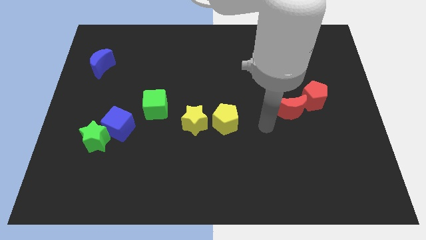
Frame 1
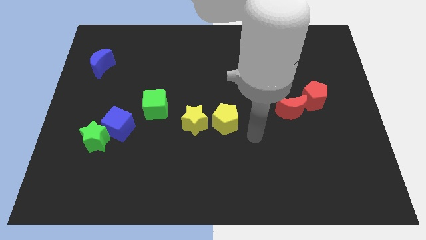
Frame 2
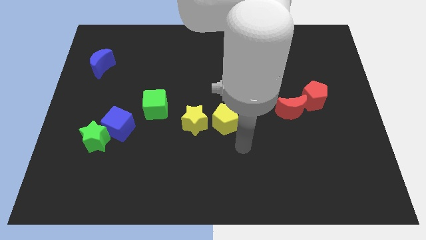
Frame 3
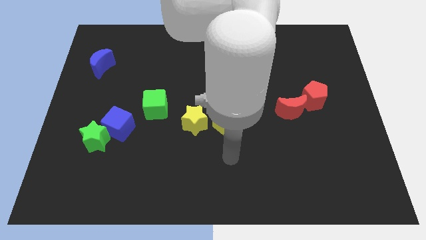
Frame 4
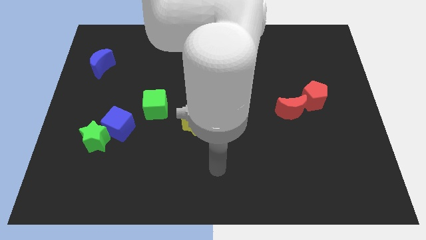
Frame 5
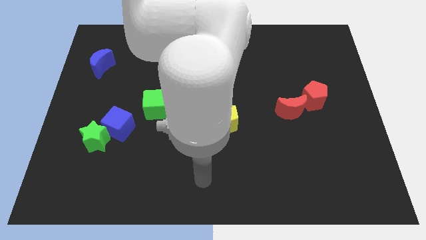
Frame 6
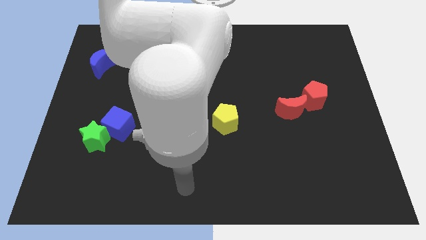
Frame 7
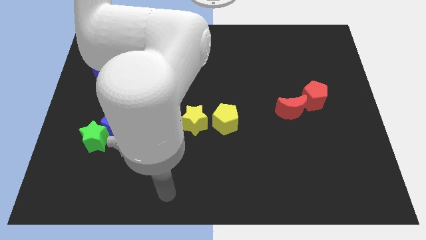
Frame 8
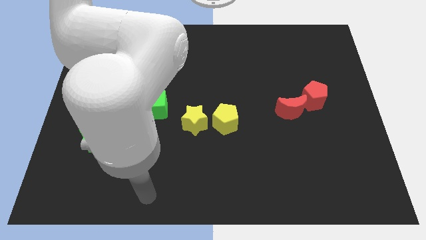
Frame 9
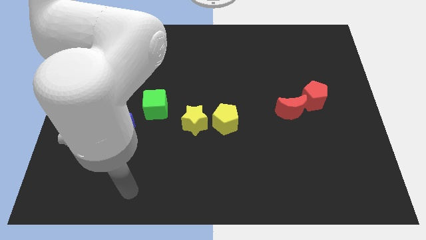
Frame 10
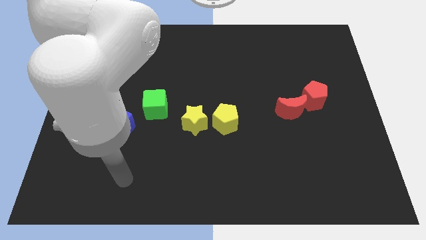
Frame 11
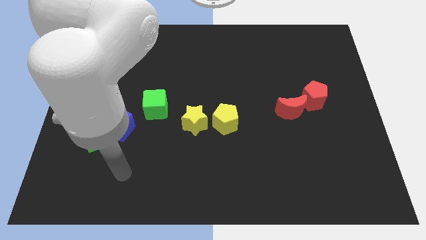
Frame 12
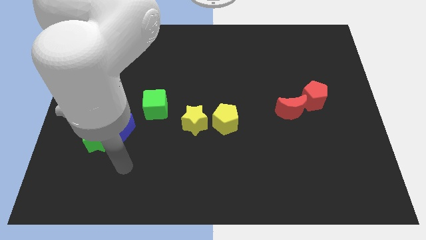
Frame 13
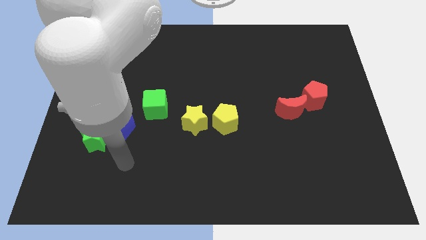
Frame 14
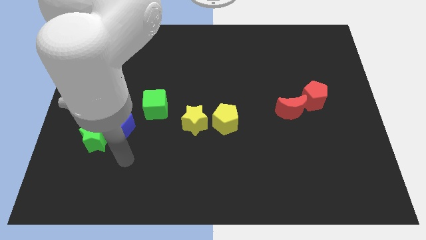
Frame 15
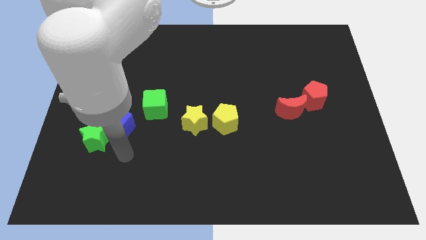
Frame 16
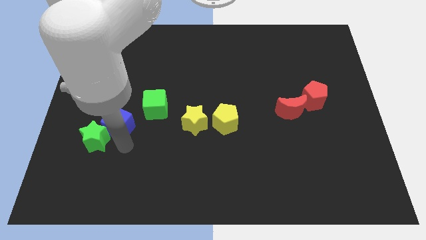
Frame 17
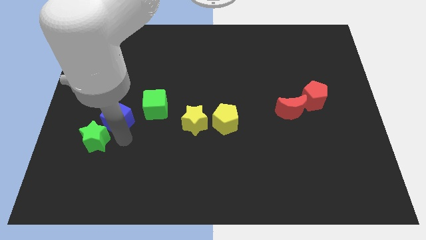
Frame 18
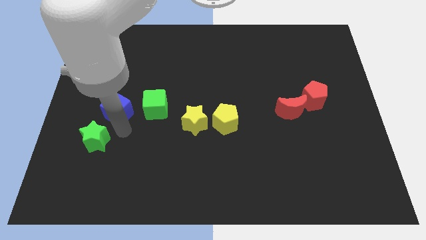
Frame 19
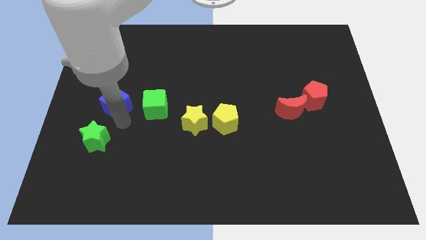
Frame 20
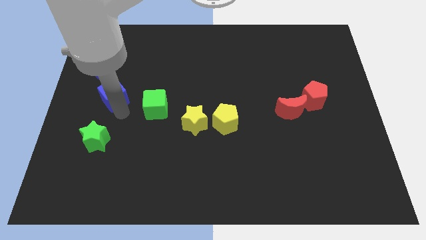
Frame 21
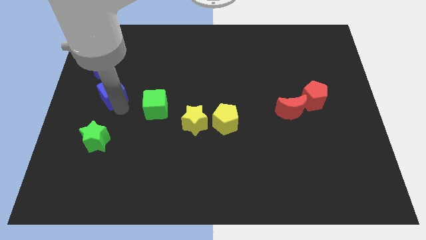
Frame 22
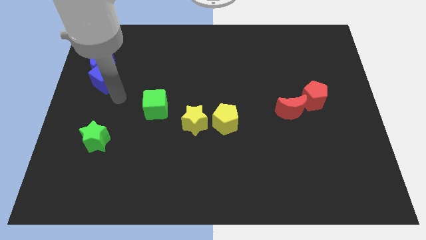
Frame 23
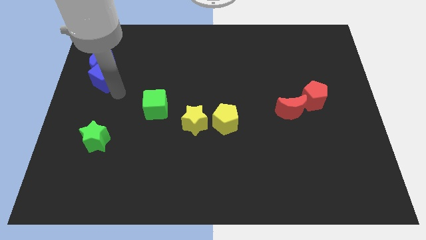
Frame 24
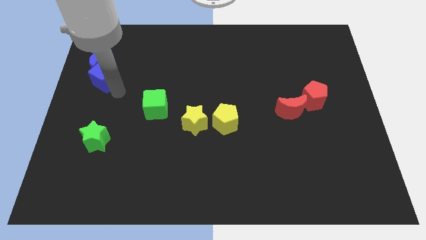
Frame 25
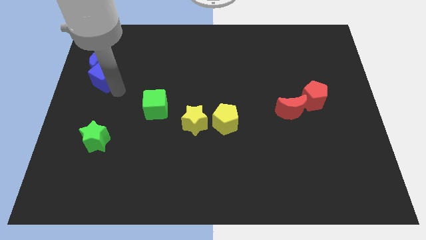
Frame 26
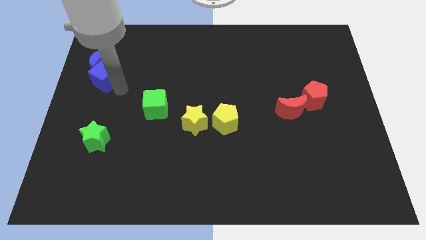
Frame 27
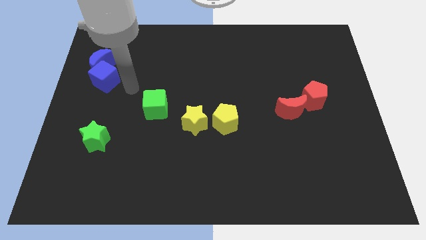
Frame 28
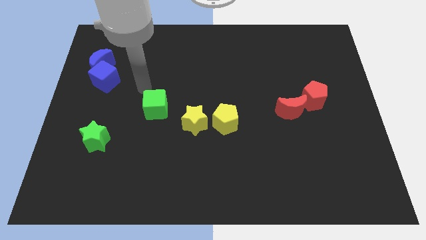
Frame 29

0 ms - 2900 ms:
push the blue cube into the blue moon

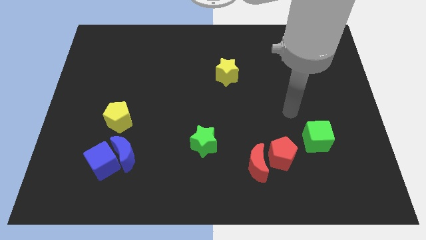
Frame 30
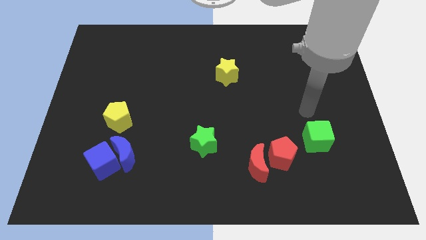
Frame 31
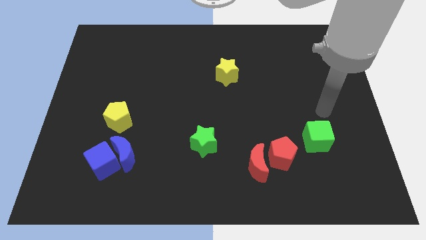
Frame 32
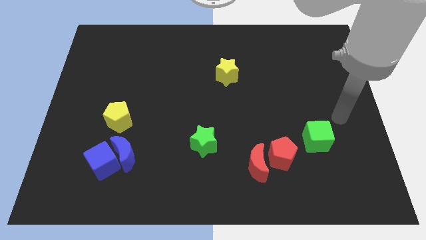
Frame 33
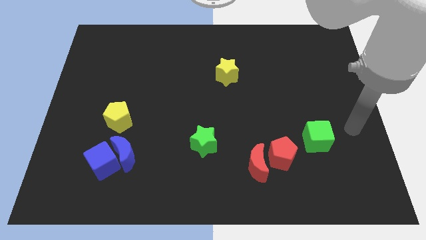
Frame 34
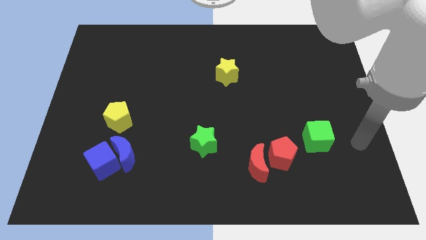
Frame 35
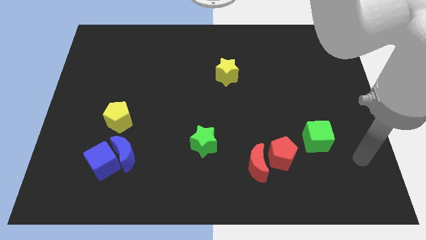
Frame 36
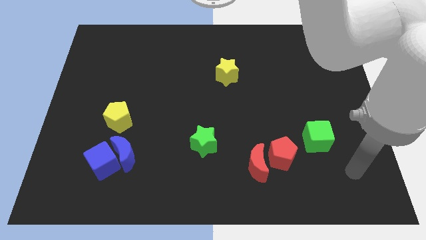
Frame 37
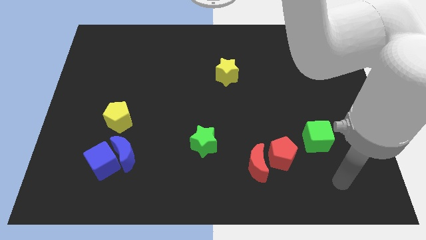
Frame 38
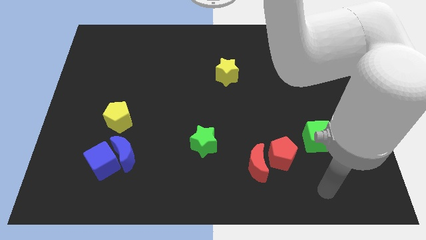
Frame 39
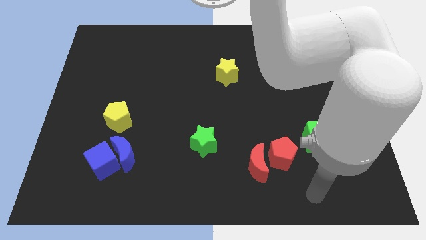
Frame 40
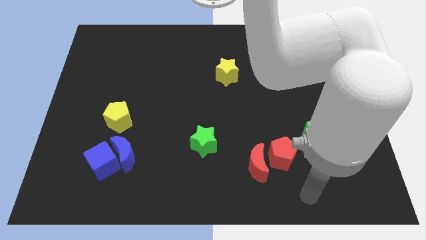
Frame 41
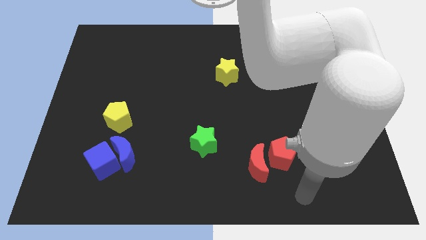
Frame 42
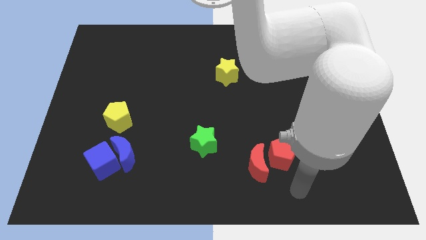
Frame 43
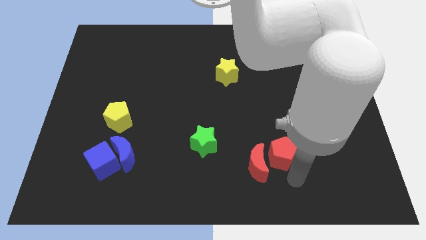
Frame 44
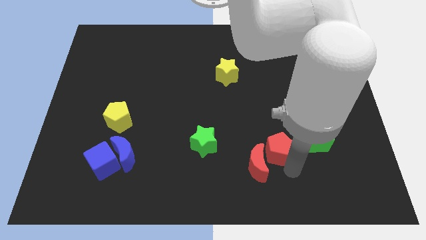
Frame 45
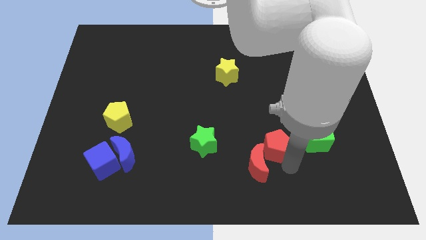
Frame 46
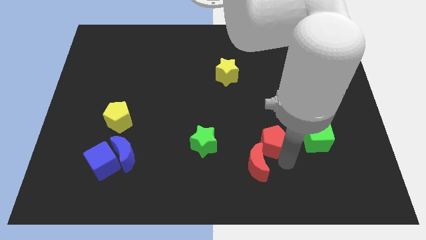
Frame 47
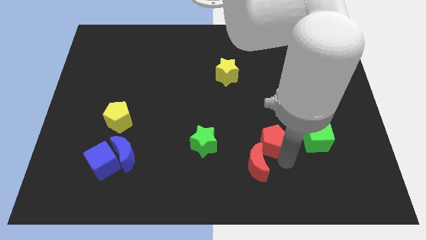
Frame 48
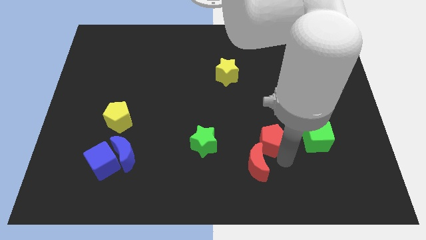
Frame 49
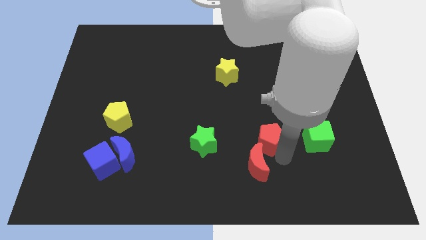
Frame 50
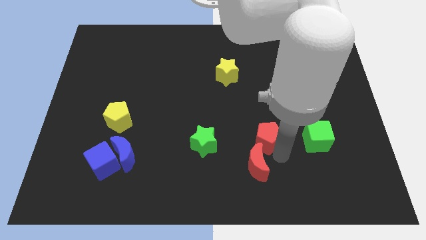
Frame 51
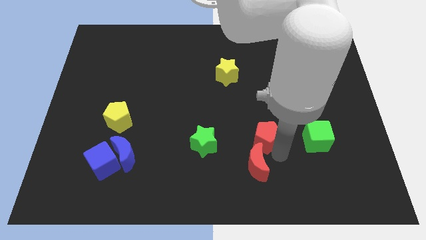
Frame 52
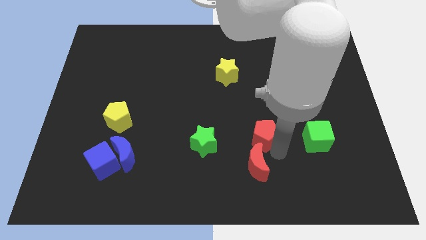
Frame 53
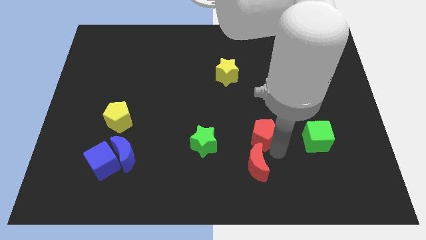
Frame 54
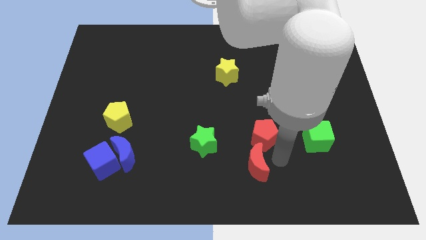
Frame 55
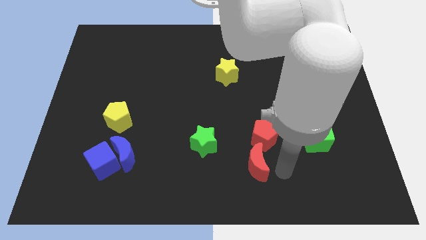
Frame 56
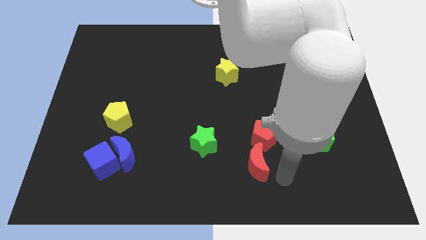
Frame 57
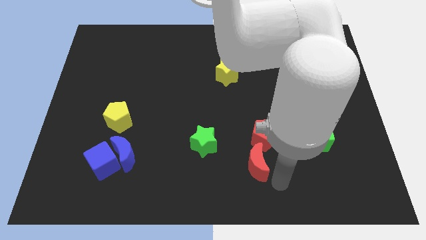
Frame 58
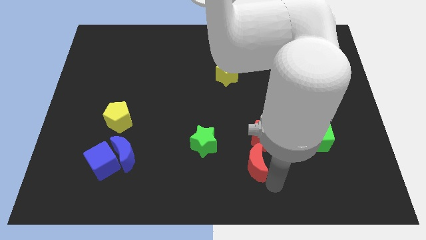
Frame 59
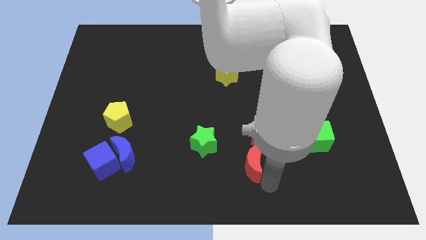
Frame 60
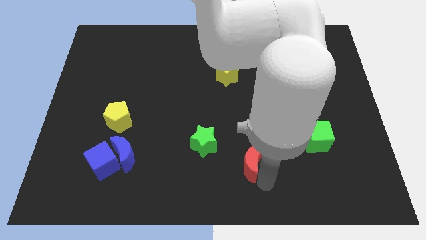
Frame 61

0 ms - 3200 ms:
place the red pentagon in between the green blocks

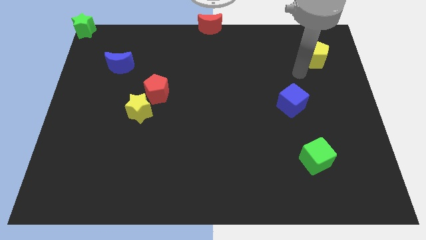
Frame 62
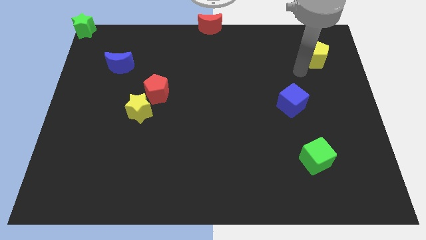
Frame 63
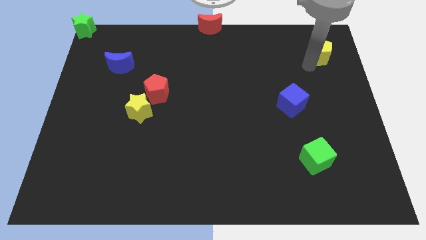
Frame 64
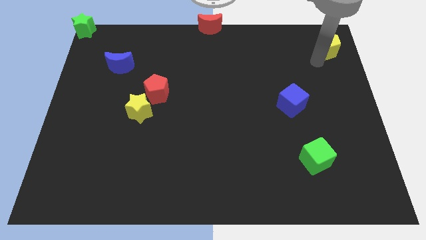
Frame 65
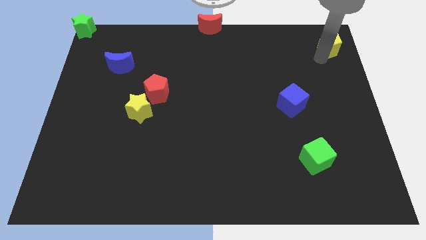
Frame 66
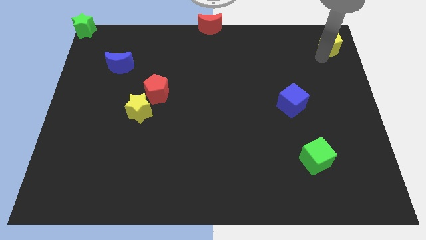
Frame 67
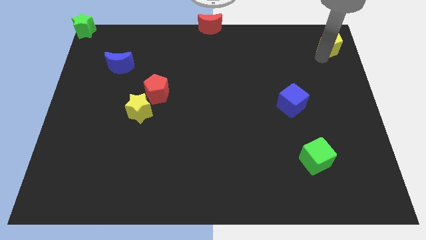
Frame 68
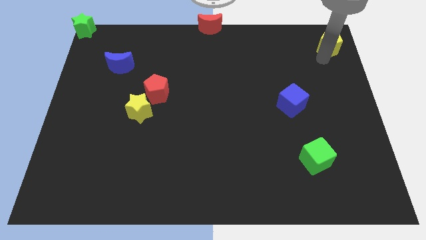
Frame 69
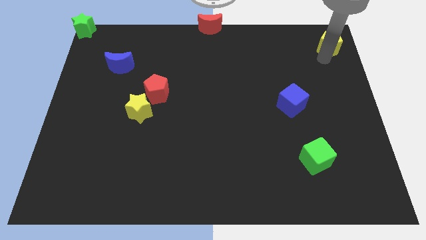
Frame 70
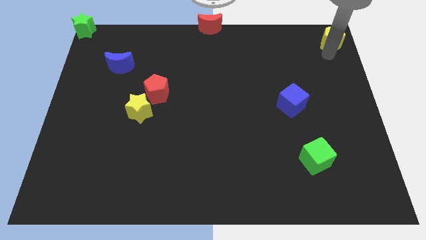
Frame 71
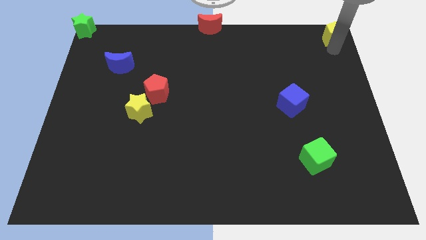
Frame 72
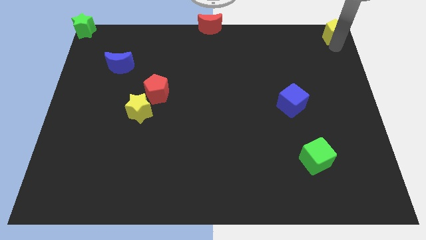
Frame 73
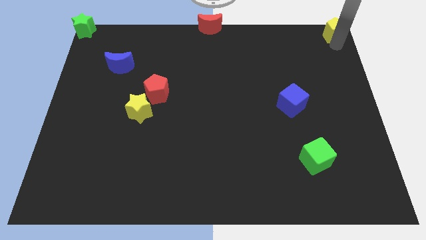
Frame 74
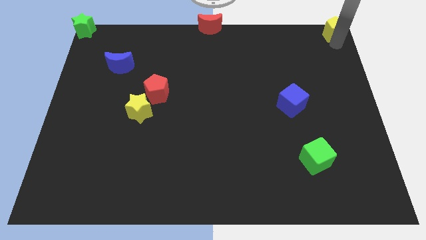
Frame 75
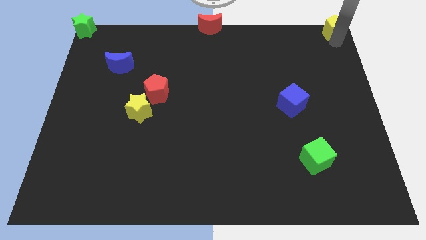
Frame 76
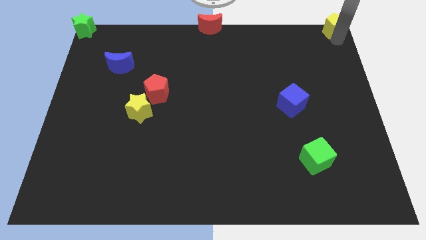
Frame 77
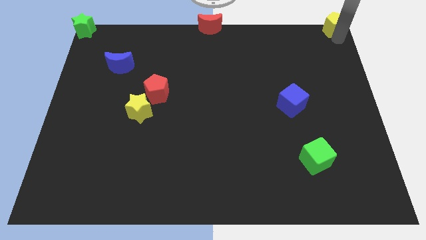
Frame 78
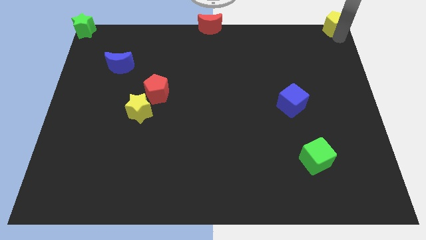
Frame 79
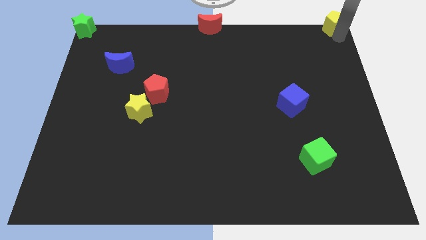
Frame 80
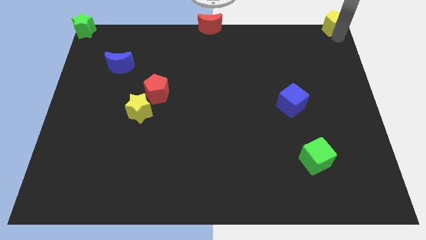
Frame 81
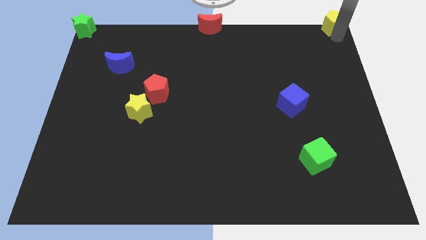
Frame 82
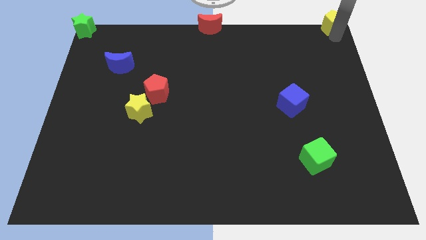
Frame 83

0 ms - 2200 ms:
move the yellow pentagon to the top right corner of the board

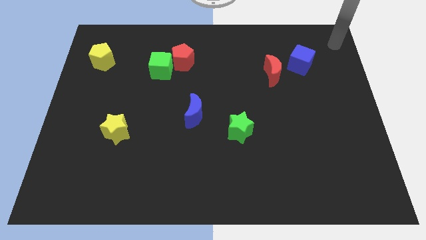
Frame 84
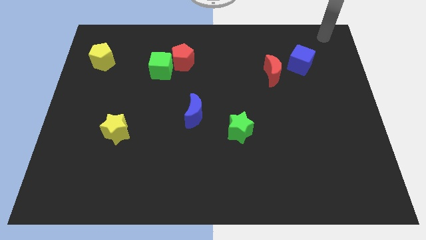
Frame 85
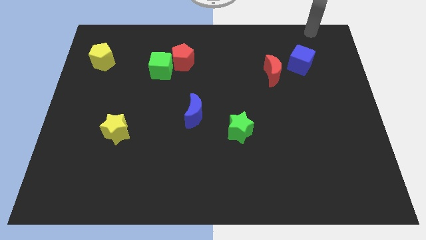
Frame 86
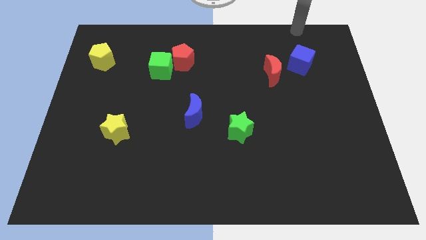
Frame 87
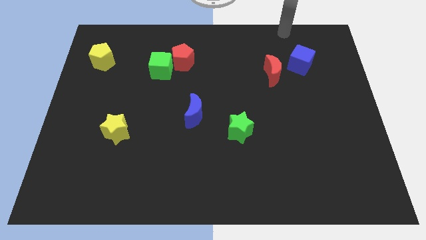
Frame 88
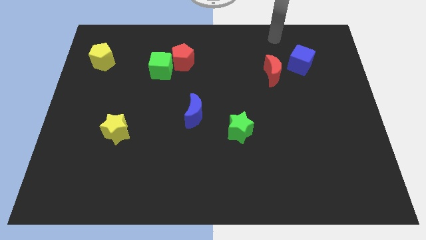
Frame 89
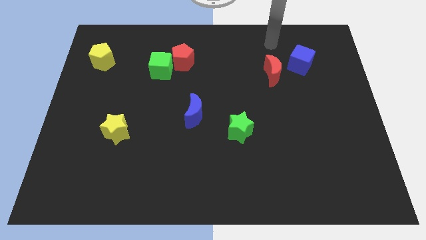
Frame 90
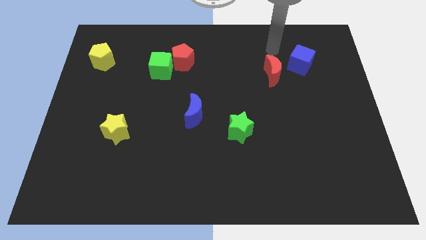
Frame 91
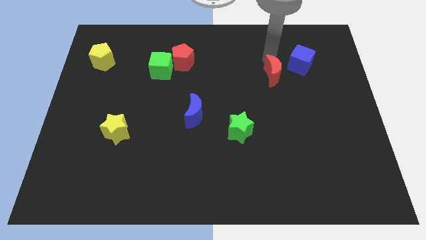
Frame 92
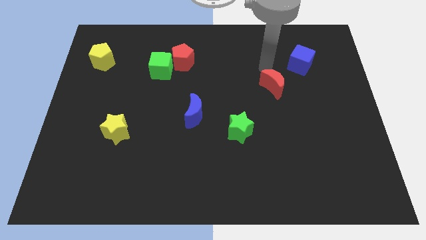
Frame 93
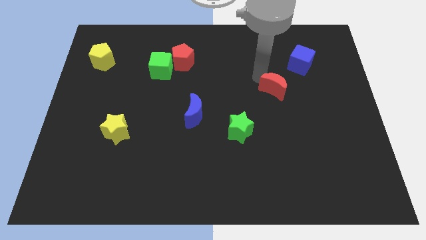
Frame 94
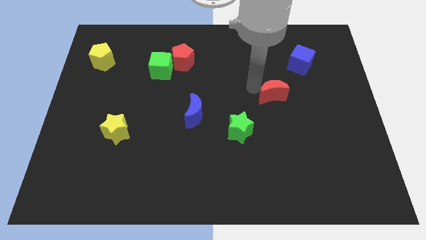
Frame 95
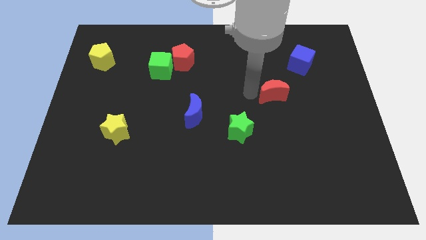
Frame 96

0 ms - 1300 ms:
turn red crescent down
